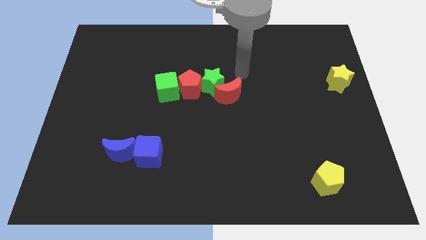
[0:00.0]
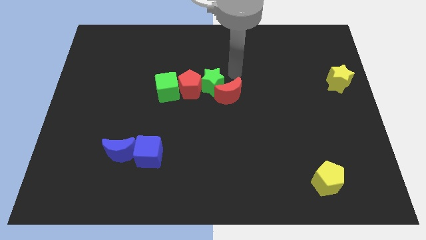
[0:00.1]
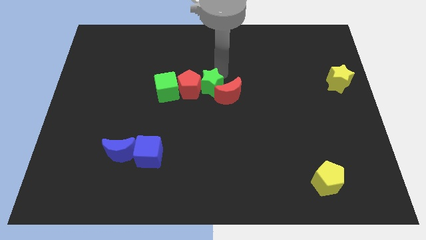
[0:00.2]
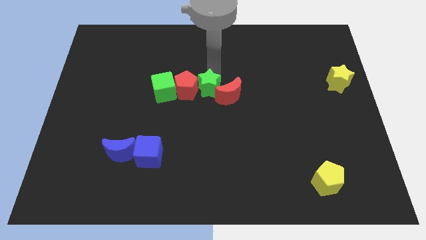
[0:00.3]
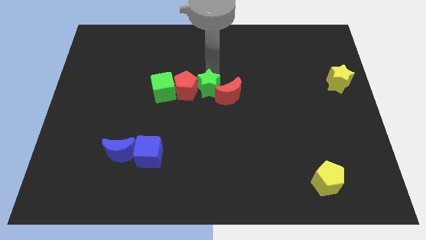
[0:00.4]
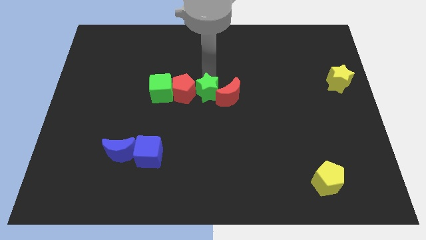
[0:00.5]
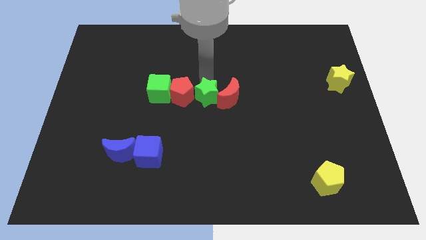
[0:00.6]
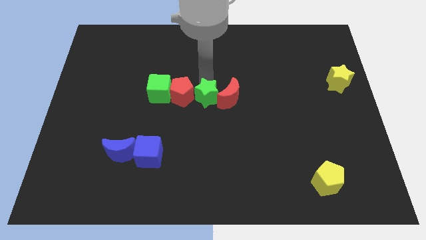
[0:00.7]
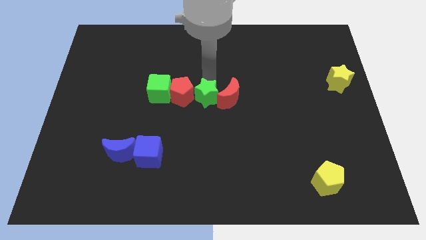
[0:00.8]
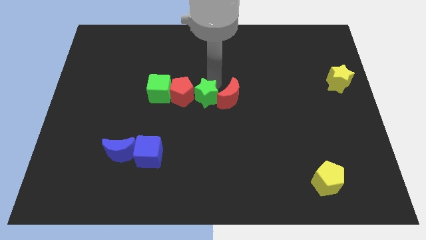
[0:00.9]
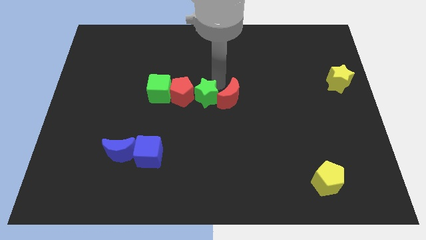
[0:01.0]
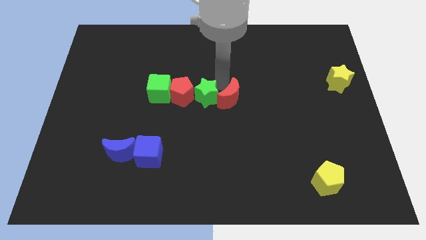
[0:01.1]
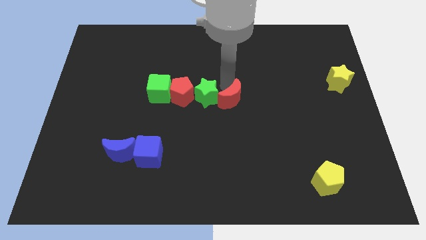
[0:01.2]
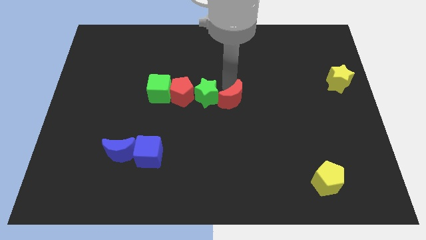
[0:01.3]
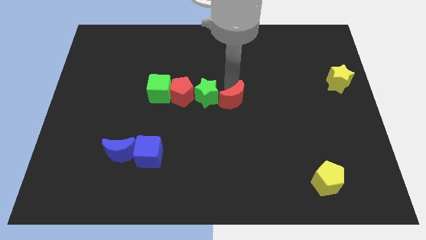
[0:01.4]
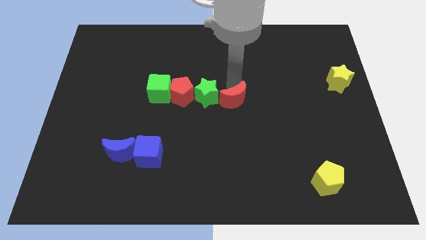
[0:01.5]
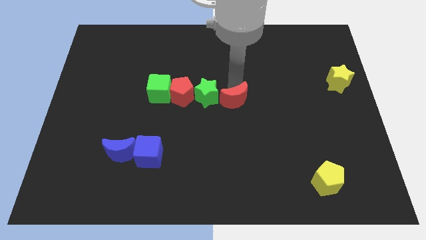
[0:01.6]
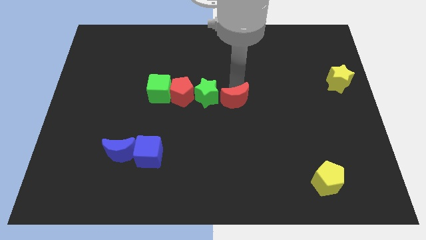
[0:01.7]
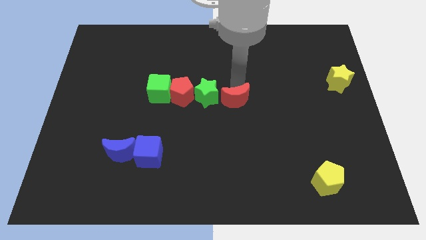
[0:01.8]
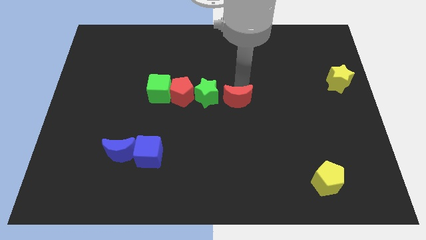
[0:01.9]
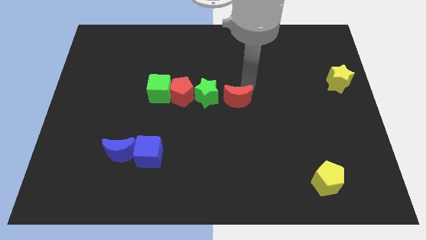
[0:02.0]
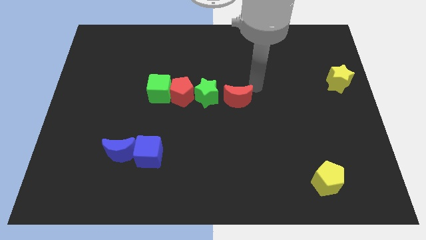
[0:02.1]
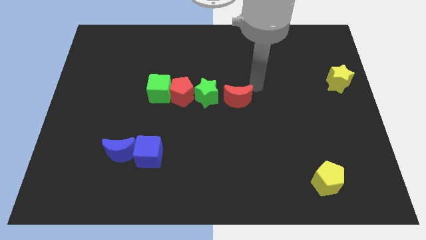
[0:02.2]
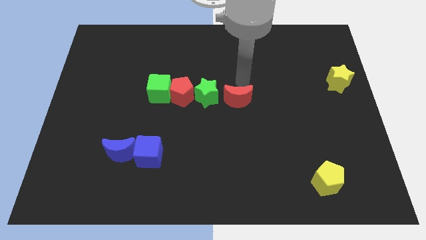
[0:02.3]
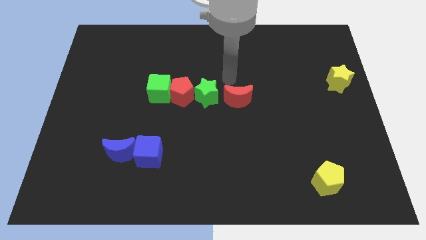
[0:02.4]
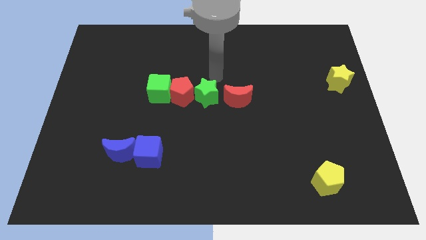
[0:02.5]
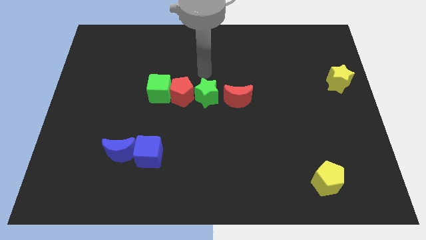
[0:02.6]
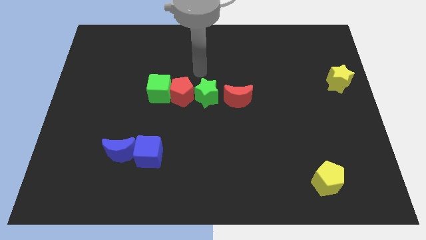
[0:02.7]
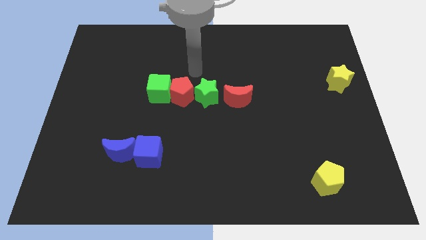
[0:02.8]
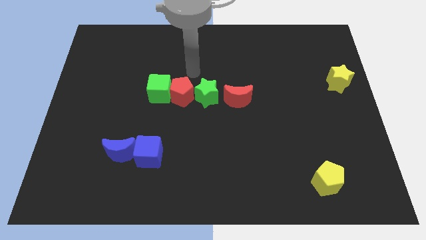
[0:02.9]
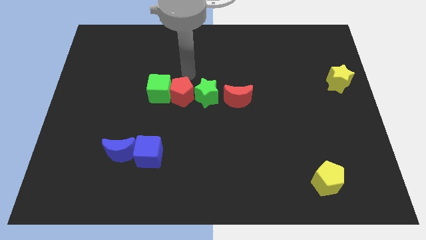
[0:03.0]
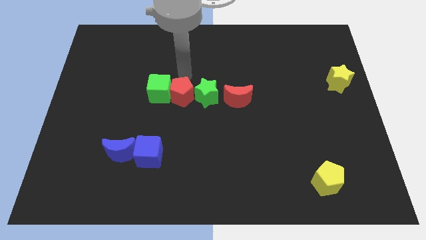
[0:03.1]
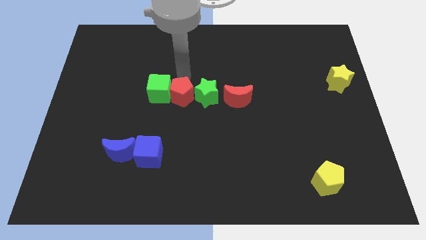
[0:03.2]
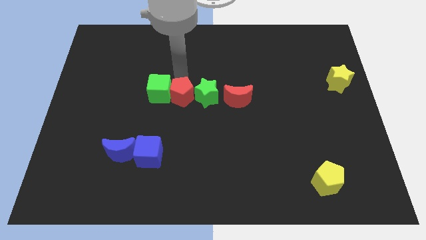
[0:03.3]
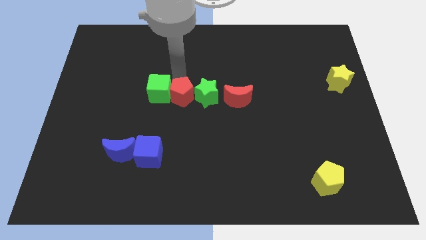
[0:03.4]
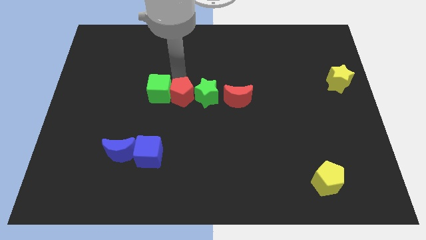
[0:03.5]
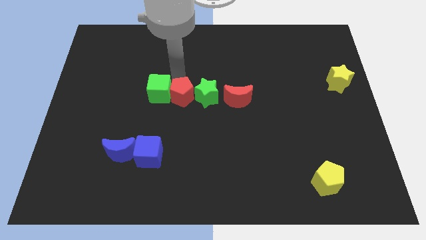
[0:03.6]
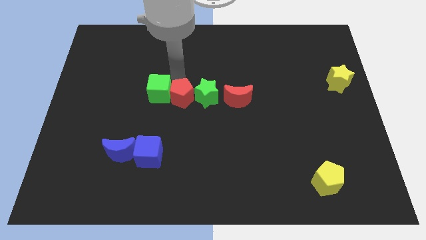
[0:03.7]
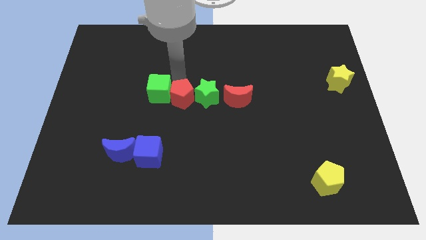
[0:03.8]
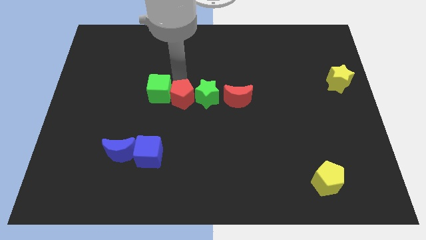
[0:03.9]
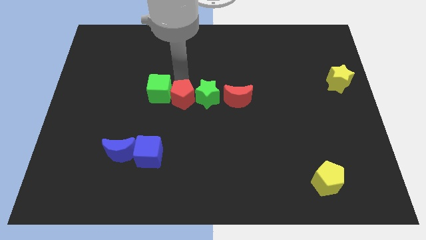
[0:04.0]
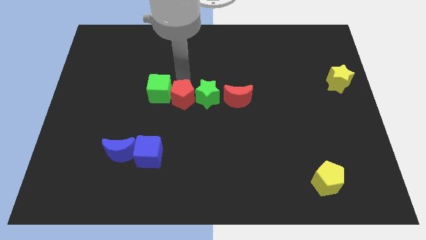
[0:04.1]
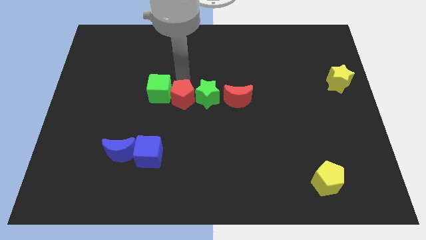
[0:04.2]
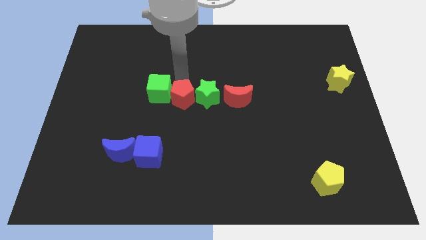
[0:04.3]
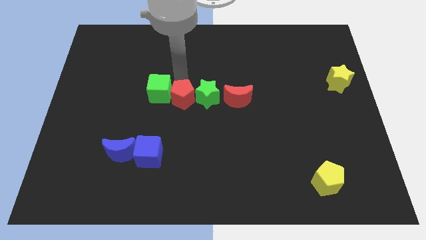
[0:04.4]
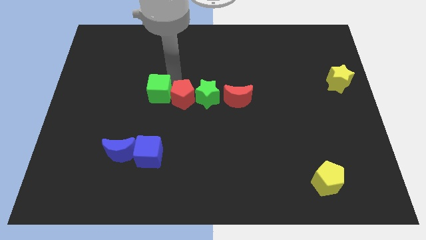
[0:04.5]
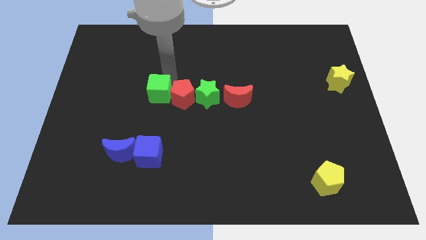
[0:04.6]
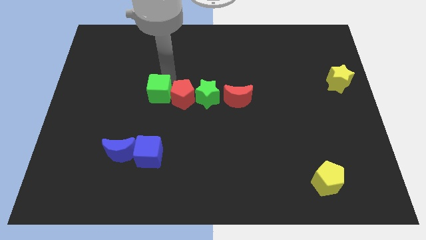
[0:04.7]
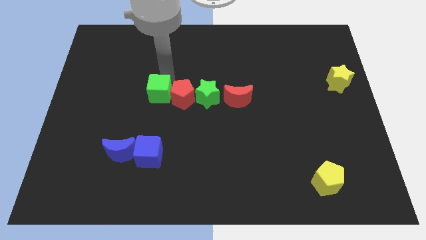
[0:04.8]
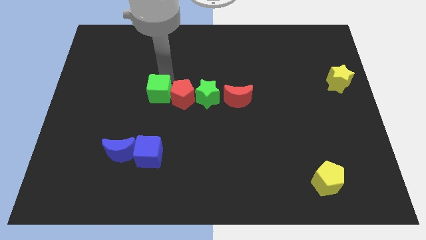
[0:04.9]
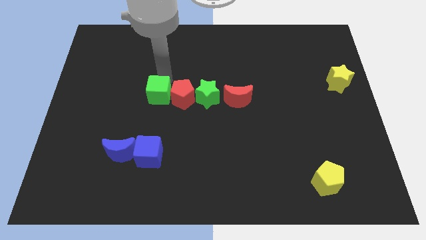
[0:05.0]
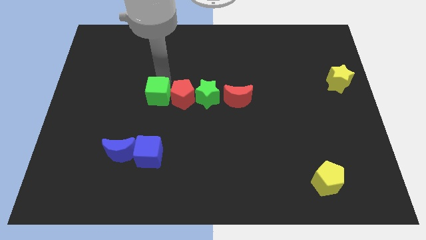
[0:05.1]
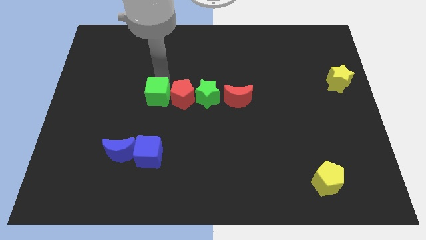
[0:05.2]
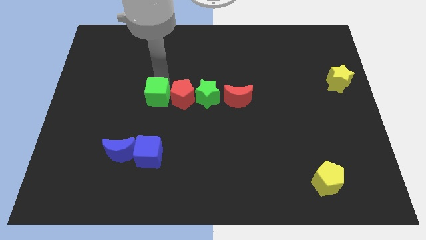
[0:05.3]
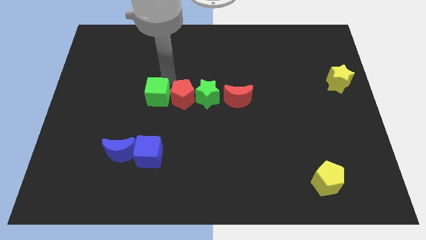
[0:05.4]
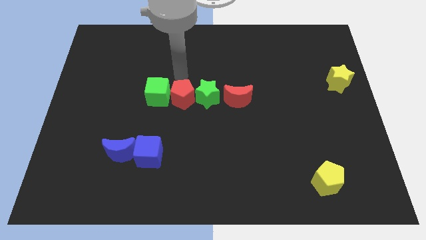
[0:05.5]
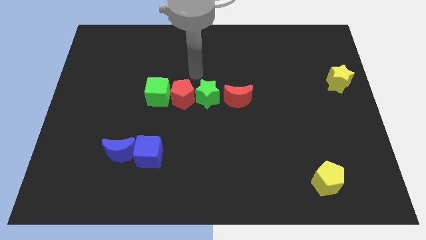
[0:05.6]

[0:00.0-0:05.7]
arrange all the green and red blocks in a horizontal line of blocks

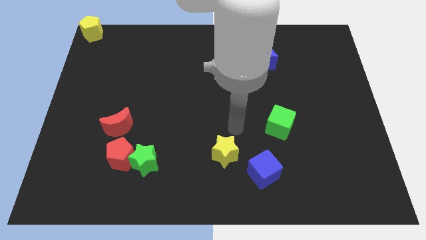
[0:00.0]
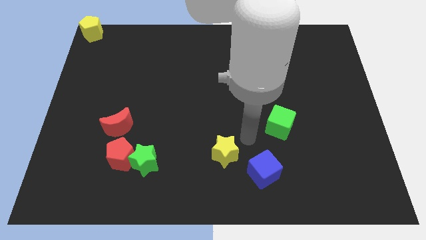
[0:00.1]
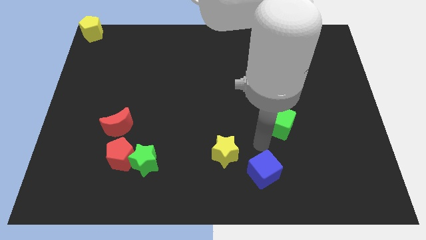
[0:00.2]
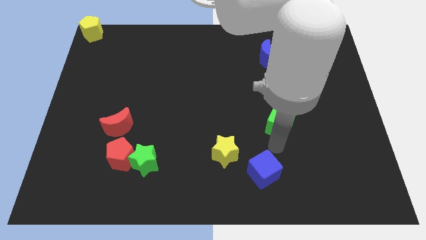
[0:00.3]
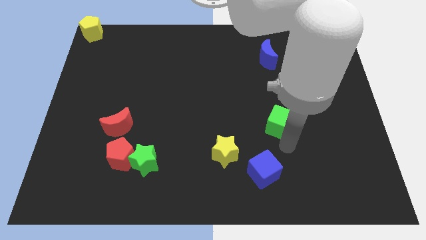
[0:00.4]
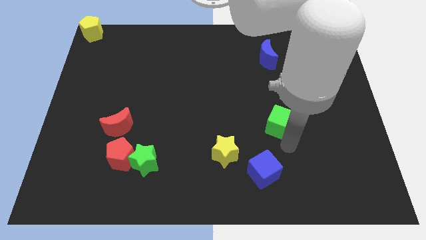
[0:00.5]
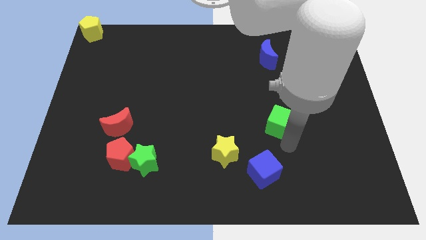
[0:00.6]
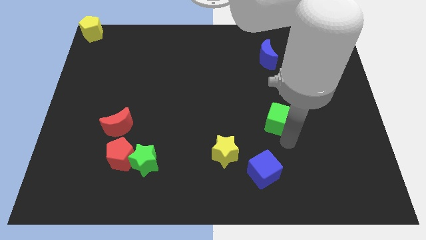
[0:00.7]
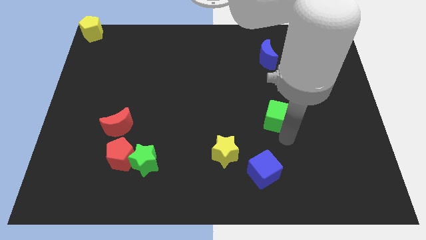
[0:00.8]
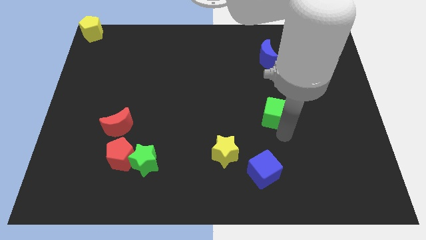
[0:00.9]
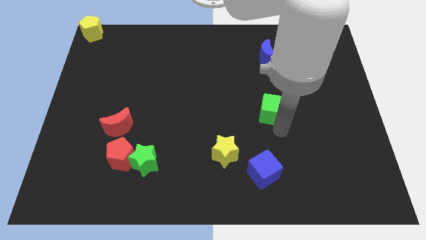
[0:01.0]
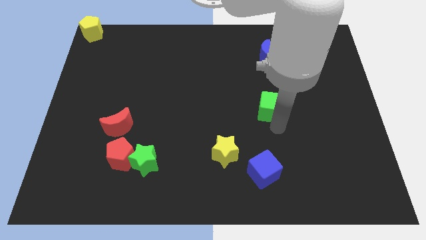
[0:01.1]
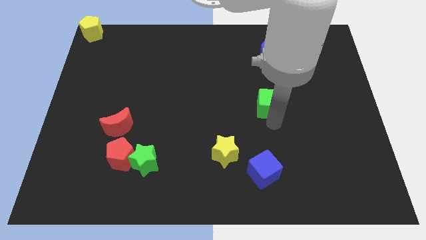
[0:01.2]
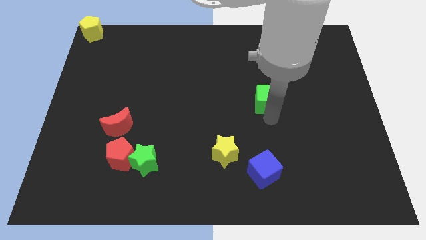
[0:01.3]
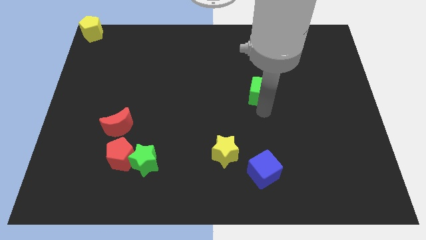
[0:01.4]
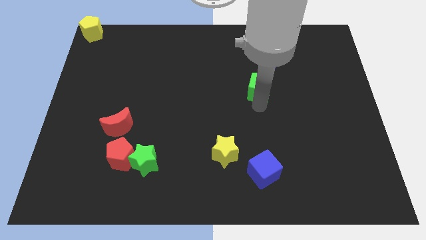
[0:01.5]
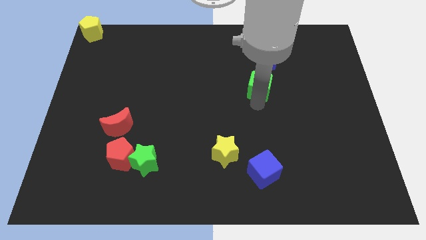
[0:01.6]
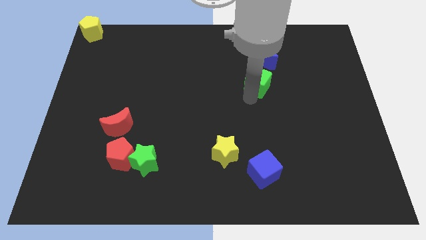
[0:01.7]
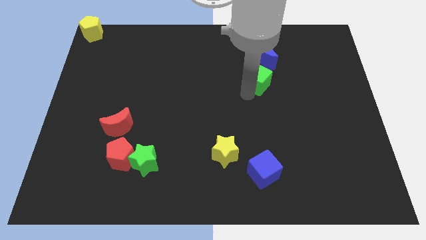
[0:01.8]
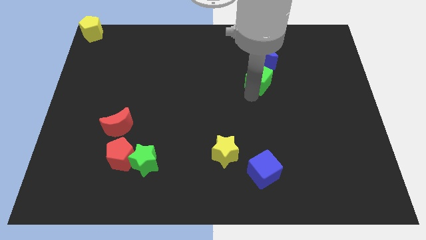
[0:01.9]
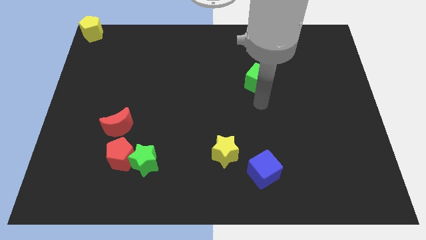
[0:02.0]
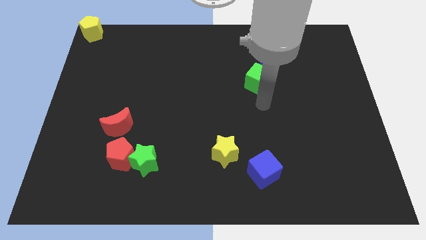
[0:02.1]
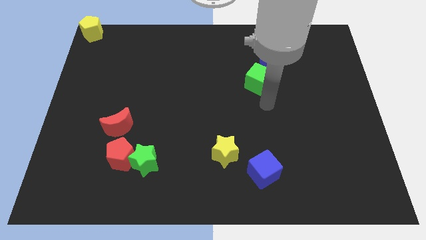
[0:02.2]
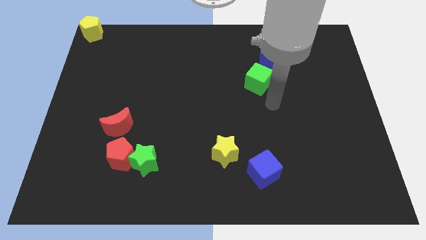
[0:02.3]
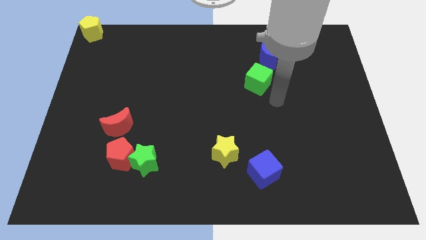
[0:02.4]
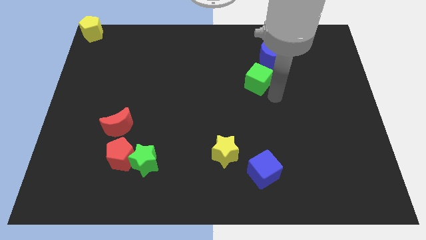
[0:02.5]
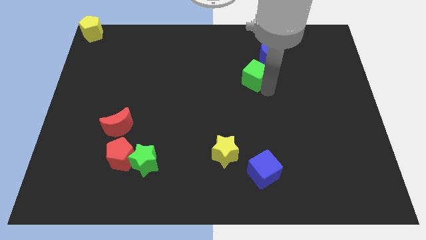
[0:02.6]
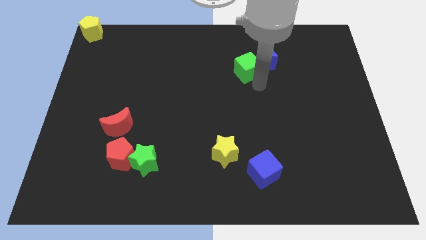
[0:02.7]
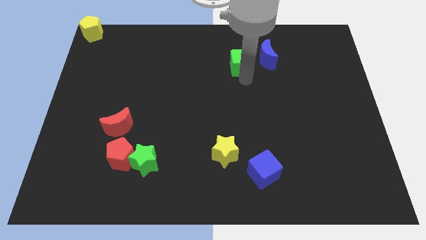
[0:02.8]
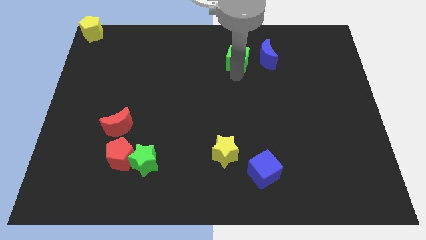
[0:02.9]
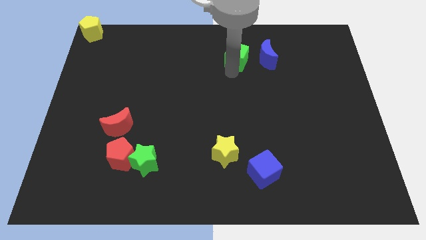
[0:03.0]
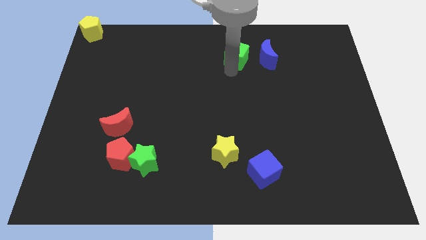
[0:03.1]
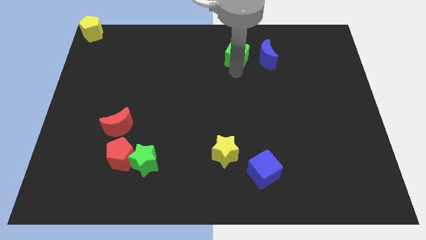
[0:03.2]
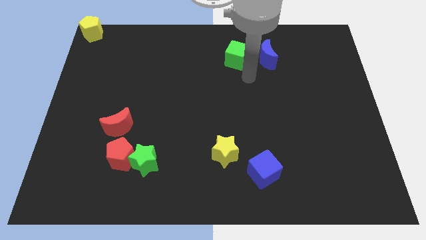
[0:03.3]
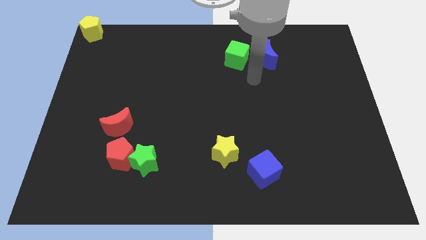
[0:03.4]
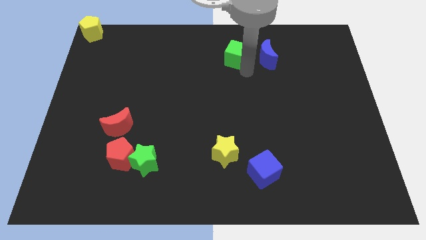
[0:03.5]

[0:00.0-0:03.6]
move the green cube parallel left to the blue moon
